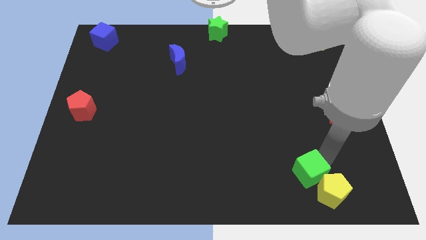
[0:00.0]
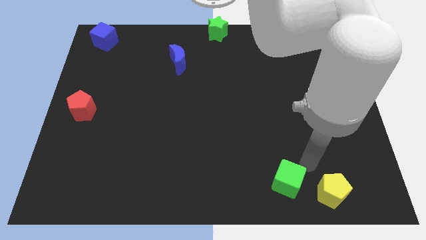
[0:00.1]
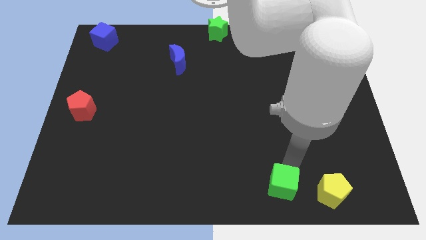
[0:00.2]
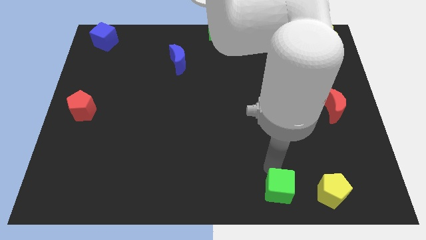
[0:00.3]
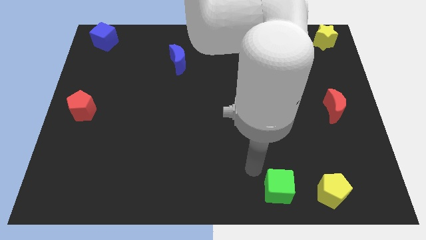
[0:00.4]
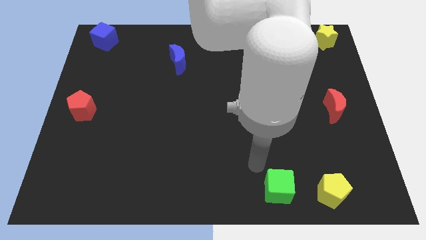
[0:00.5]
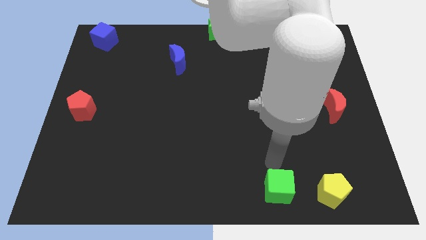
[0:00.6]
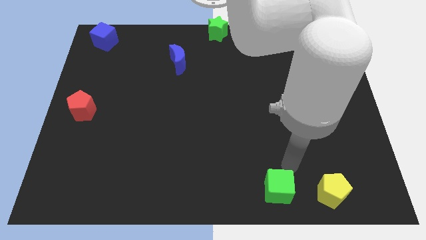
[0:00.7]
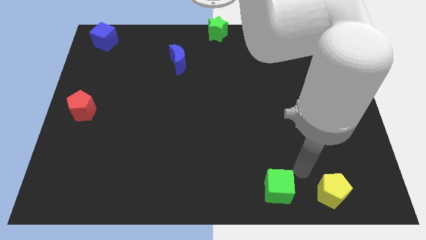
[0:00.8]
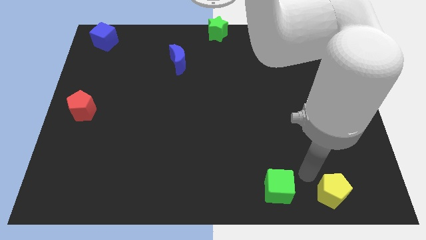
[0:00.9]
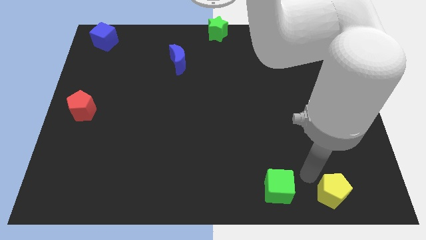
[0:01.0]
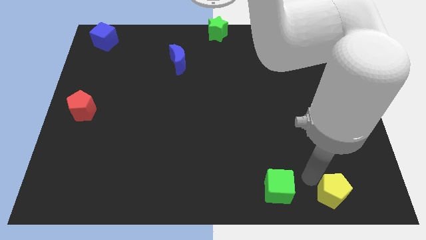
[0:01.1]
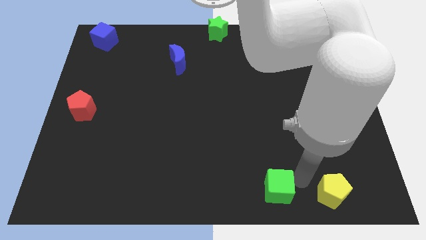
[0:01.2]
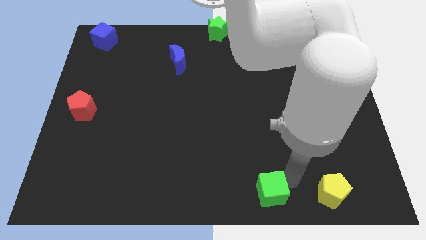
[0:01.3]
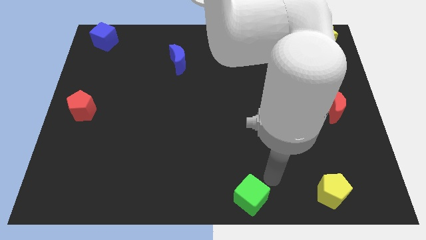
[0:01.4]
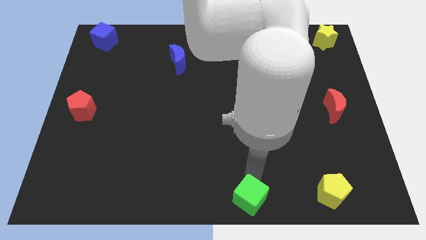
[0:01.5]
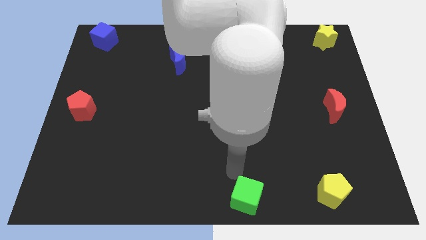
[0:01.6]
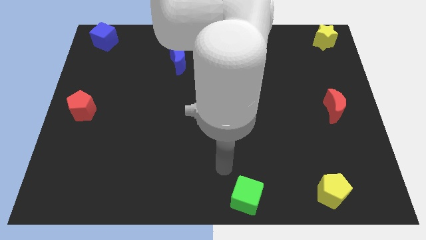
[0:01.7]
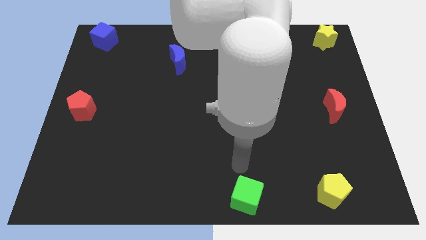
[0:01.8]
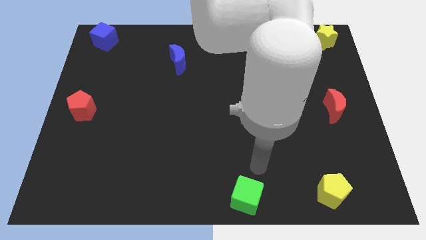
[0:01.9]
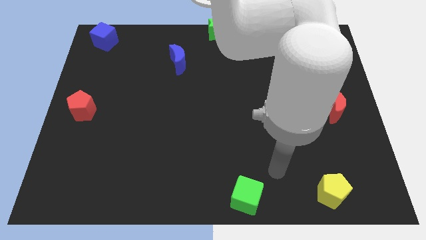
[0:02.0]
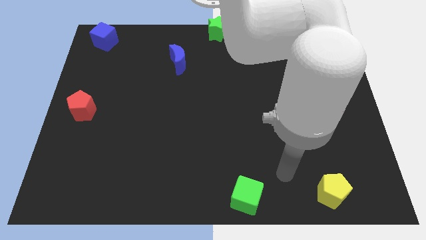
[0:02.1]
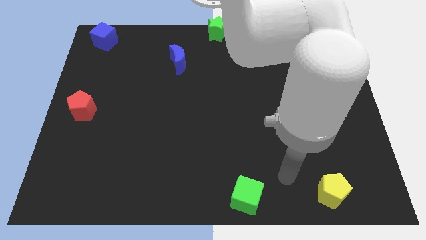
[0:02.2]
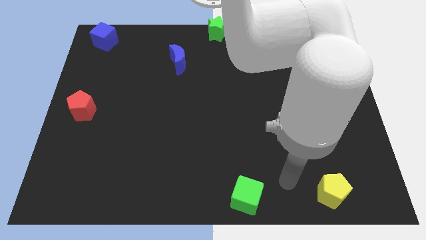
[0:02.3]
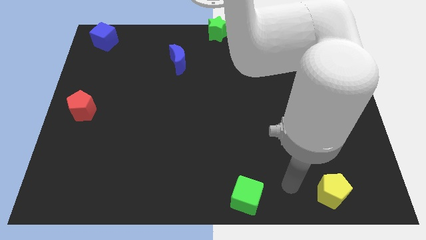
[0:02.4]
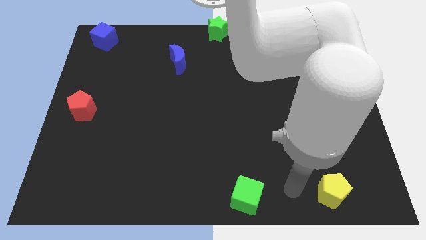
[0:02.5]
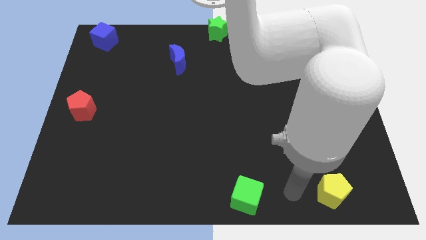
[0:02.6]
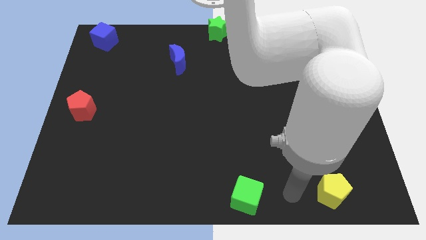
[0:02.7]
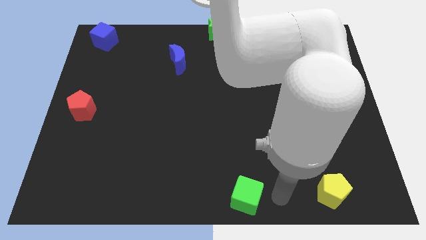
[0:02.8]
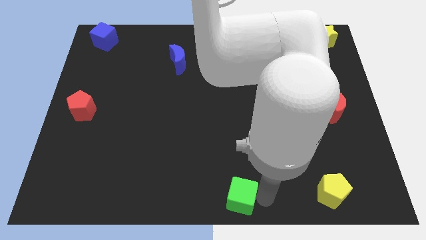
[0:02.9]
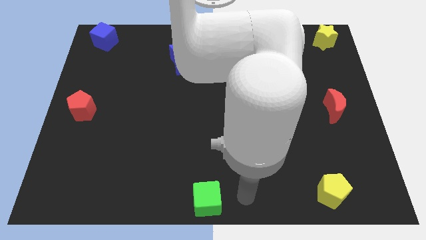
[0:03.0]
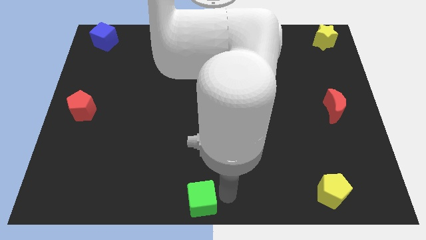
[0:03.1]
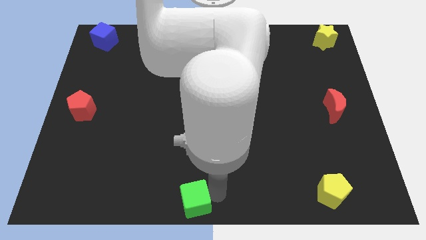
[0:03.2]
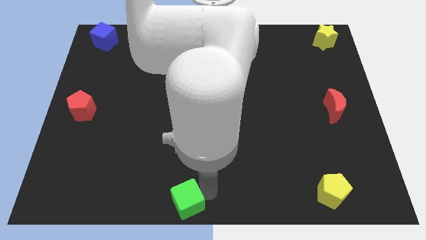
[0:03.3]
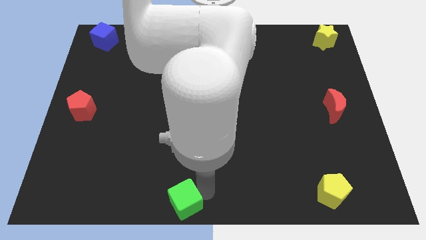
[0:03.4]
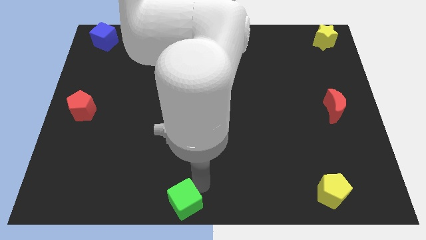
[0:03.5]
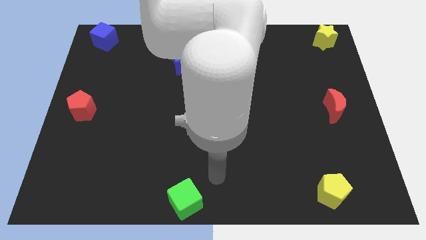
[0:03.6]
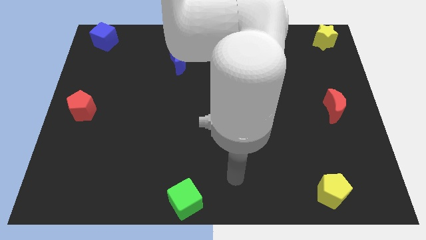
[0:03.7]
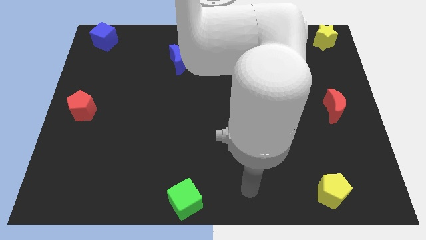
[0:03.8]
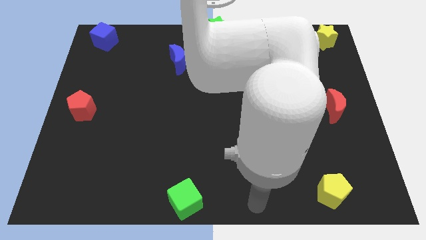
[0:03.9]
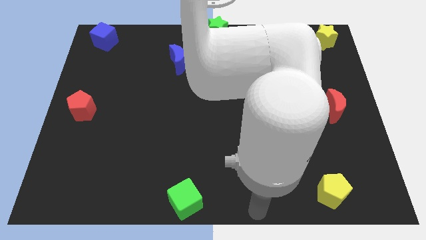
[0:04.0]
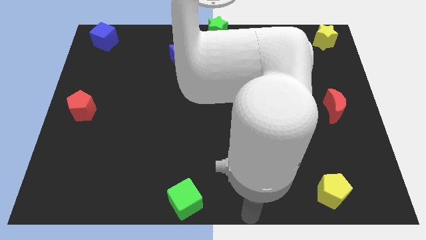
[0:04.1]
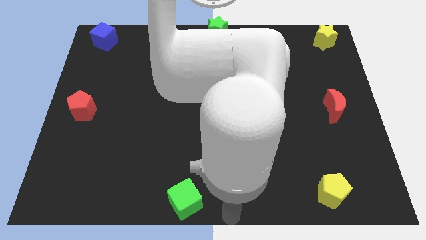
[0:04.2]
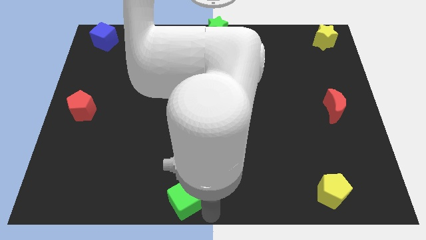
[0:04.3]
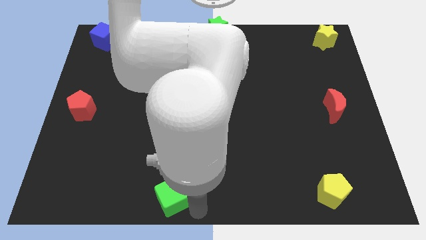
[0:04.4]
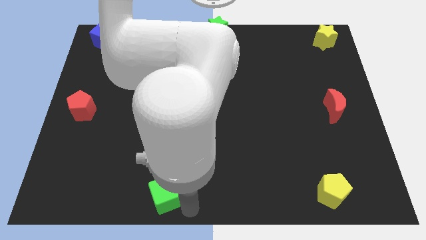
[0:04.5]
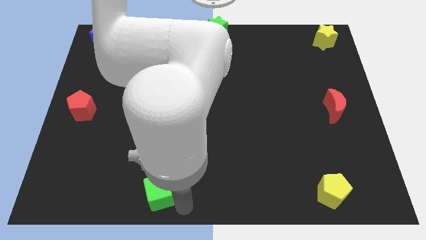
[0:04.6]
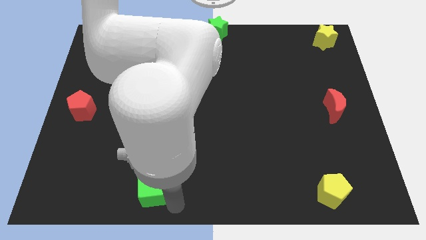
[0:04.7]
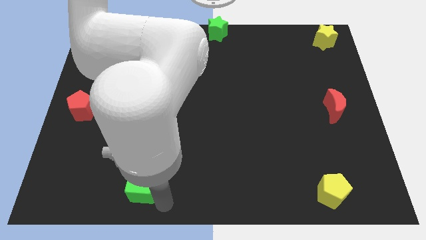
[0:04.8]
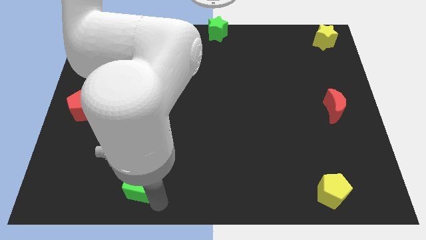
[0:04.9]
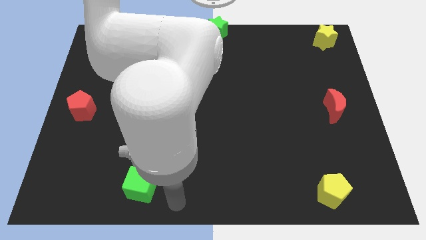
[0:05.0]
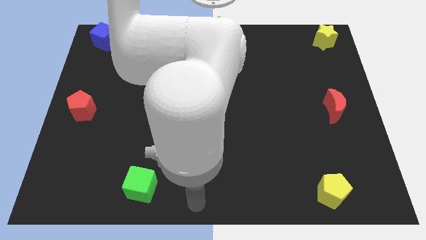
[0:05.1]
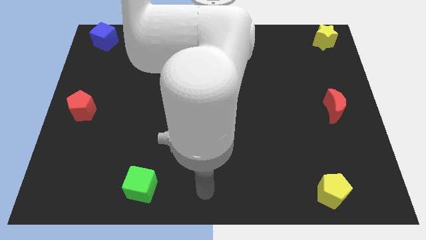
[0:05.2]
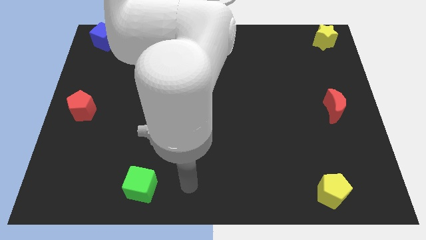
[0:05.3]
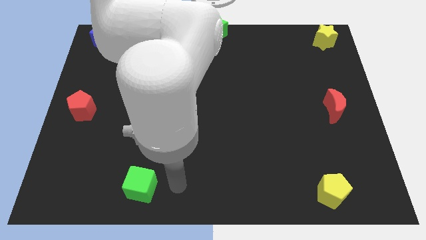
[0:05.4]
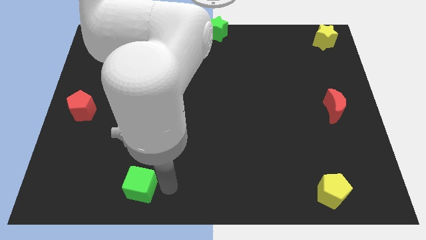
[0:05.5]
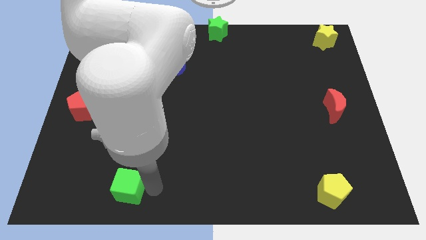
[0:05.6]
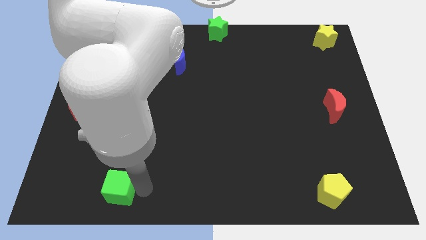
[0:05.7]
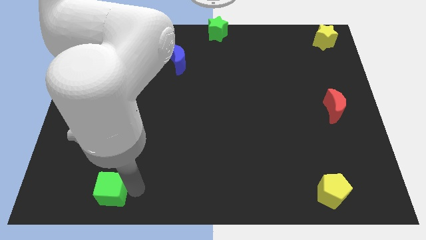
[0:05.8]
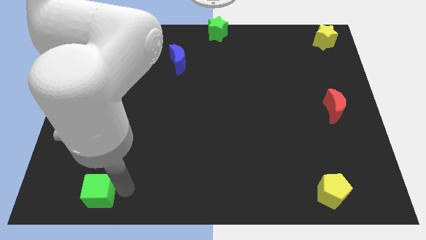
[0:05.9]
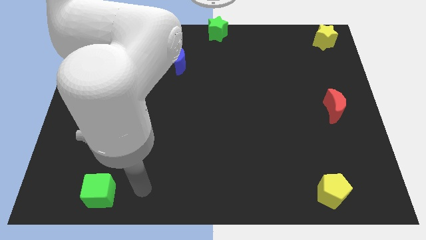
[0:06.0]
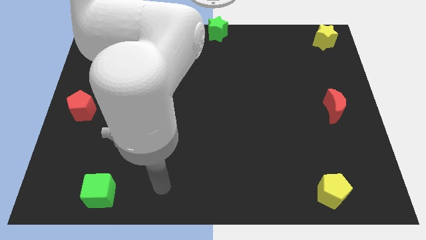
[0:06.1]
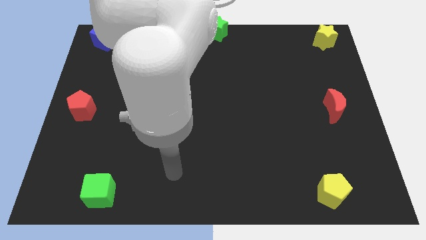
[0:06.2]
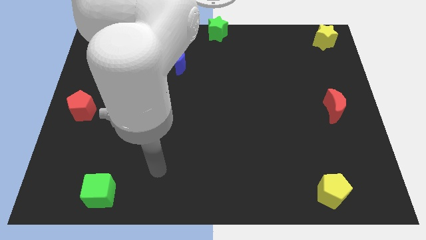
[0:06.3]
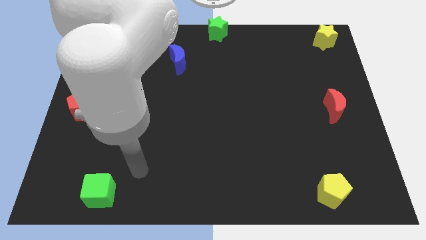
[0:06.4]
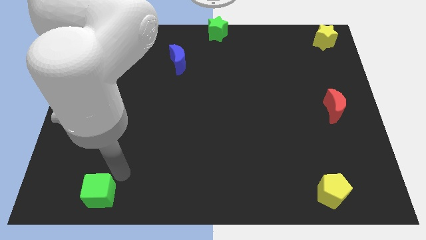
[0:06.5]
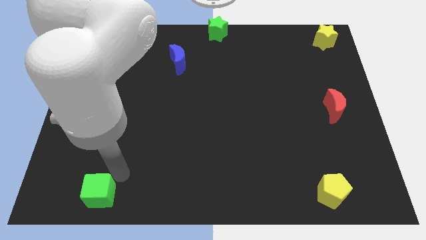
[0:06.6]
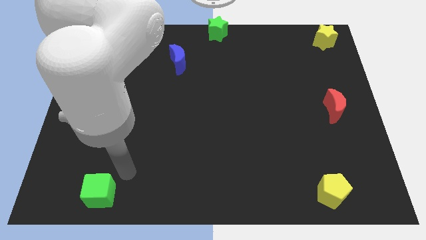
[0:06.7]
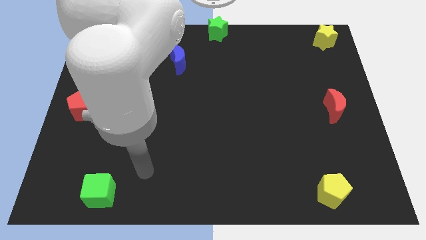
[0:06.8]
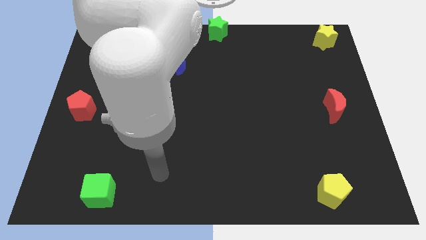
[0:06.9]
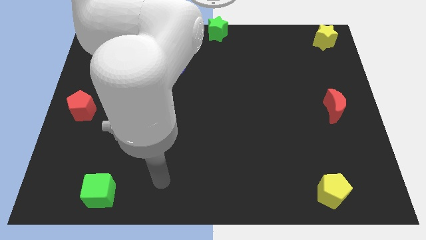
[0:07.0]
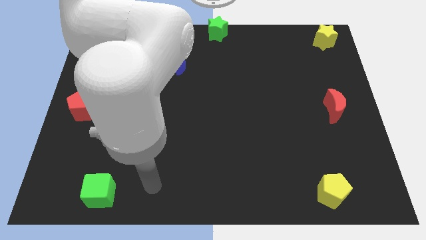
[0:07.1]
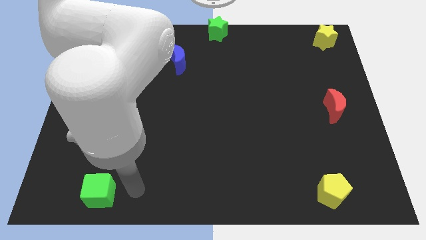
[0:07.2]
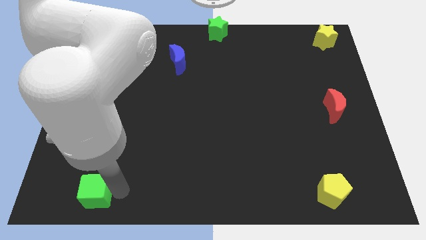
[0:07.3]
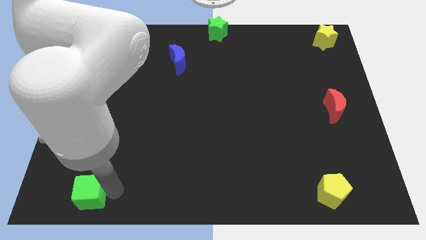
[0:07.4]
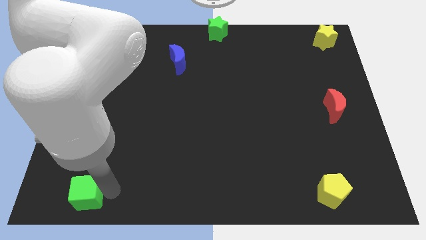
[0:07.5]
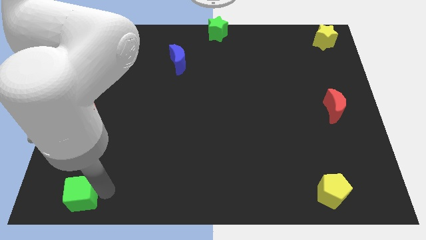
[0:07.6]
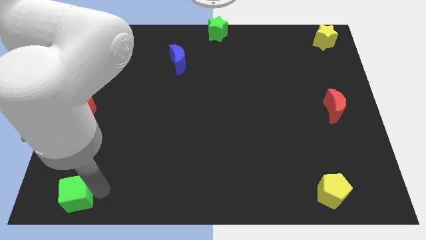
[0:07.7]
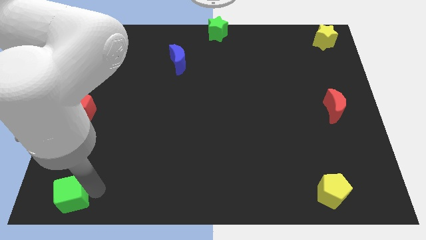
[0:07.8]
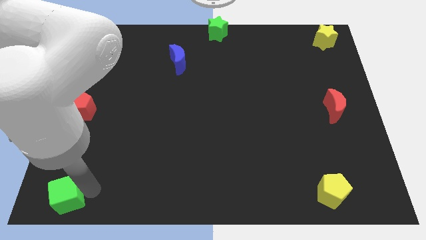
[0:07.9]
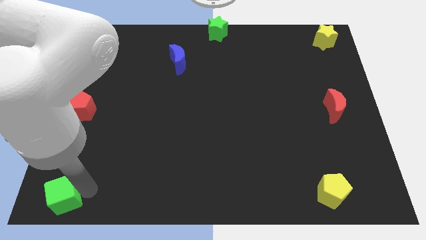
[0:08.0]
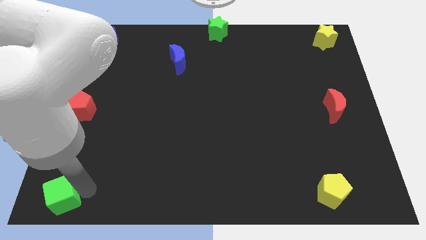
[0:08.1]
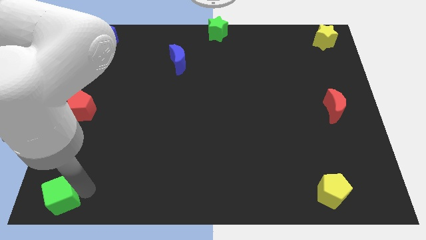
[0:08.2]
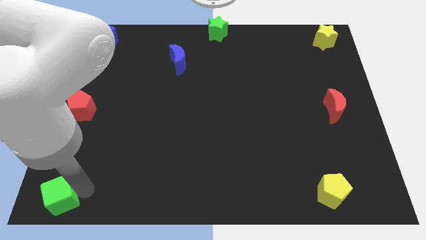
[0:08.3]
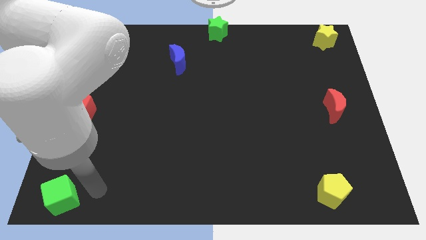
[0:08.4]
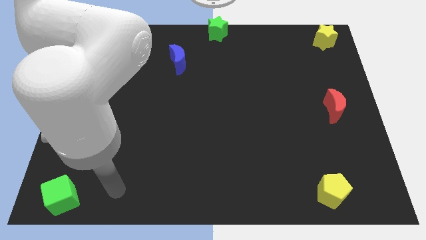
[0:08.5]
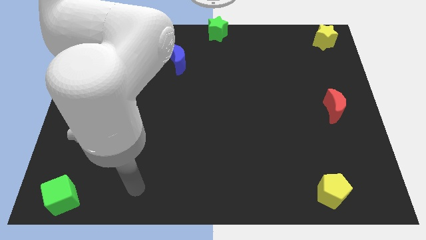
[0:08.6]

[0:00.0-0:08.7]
push green cube to the bottom left end
